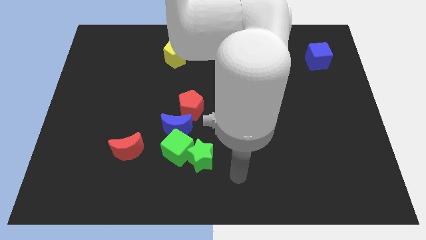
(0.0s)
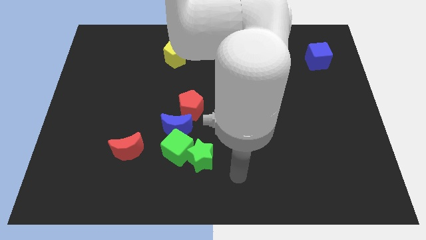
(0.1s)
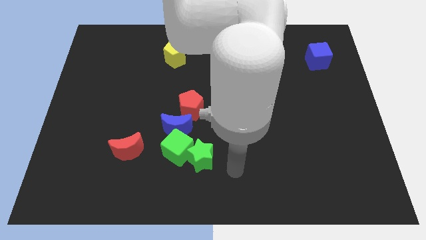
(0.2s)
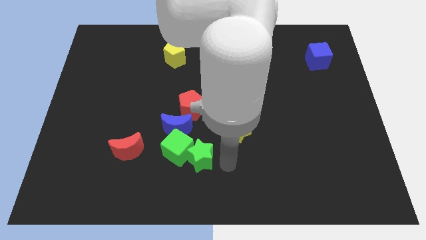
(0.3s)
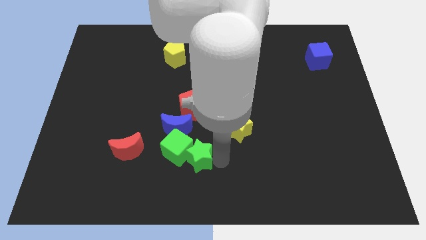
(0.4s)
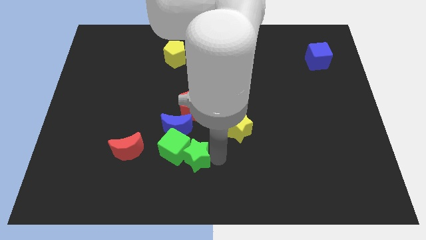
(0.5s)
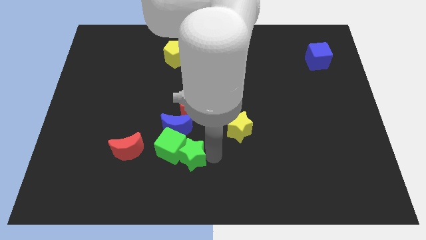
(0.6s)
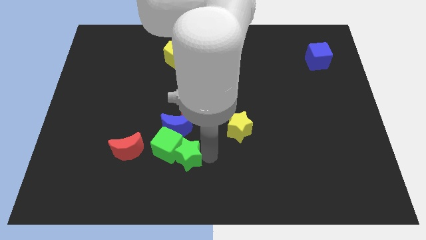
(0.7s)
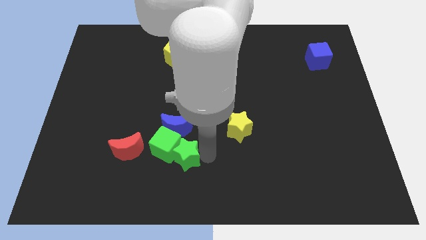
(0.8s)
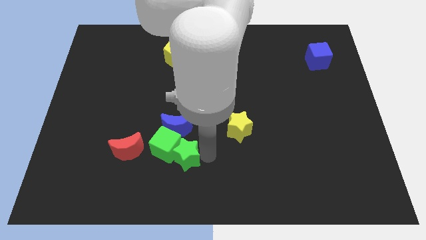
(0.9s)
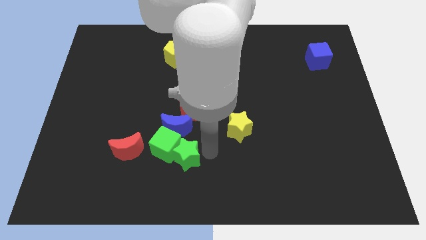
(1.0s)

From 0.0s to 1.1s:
push the green blocks slightly to the left

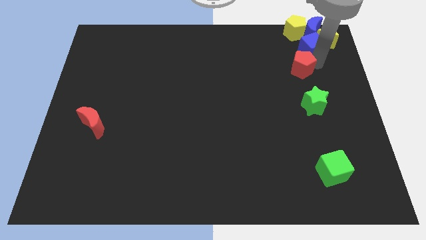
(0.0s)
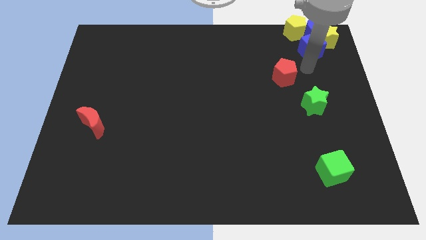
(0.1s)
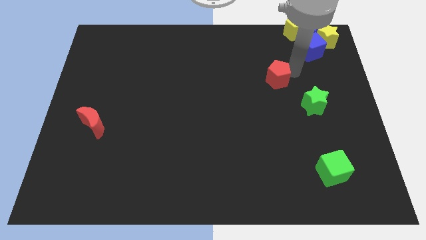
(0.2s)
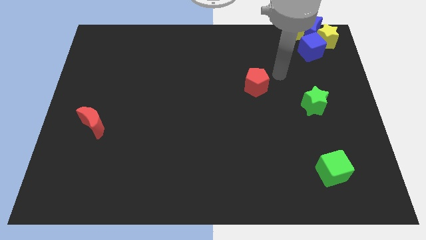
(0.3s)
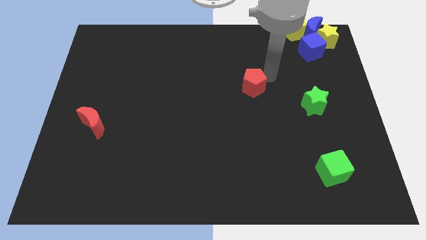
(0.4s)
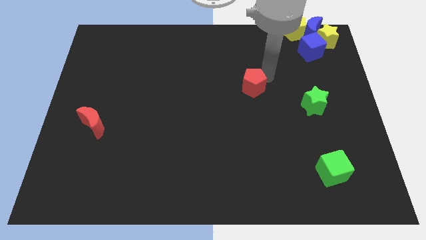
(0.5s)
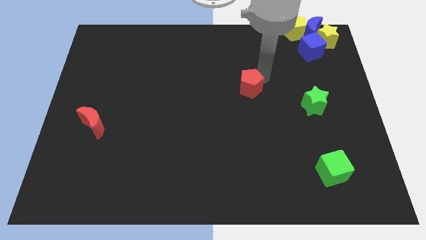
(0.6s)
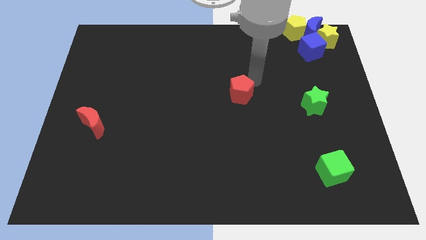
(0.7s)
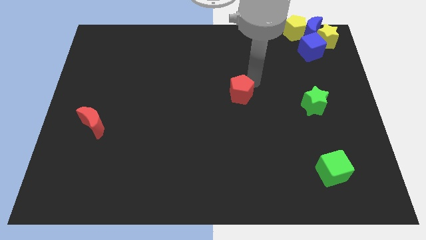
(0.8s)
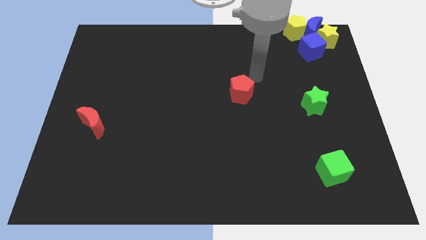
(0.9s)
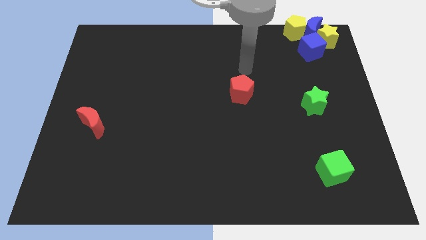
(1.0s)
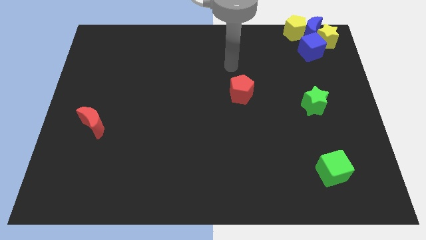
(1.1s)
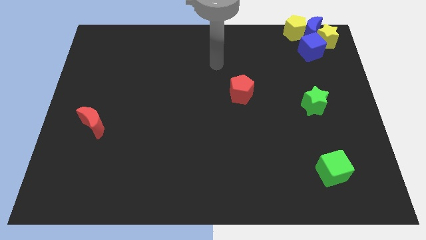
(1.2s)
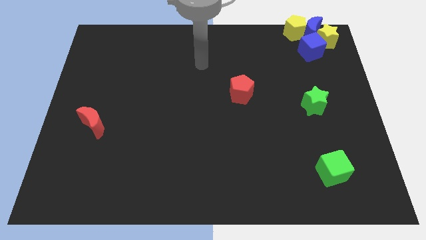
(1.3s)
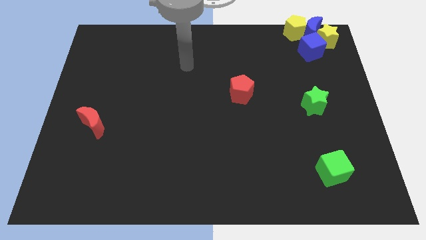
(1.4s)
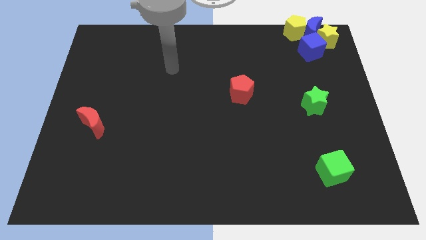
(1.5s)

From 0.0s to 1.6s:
move the red pentagon to the left of the green star

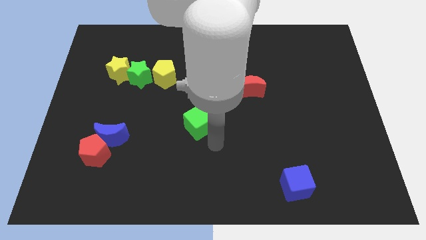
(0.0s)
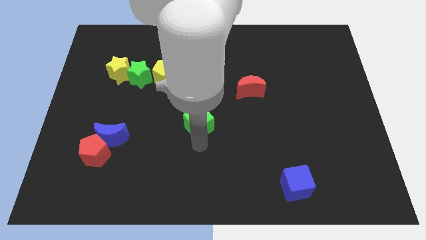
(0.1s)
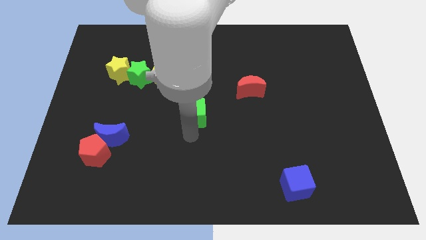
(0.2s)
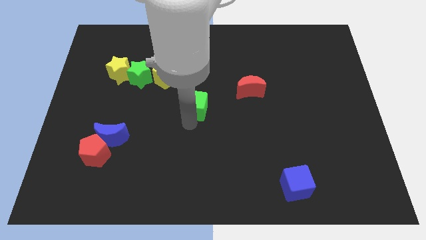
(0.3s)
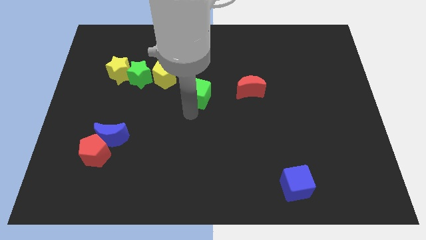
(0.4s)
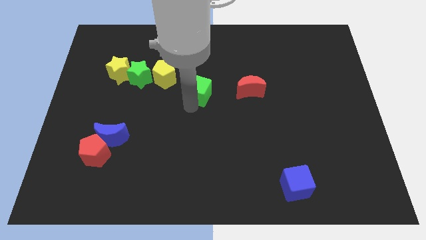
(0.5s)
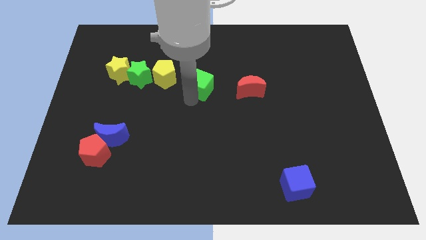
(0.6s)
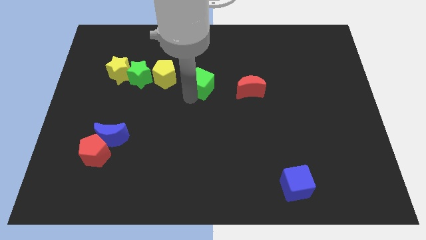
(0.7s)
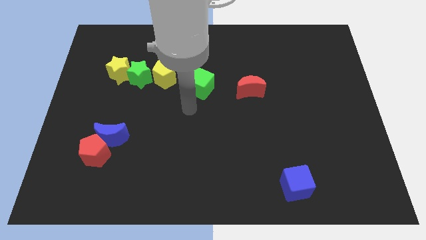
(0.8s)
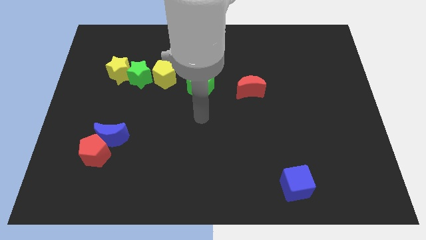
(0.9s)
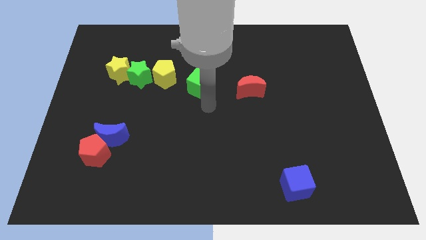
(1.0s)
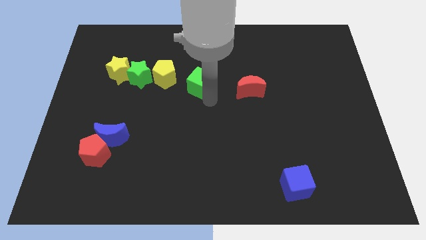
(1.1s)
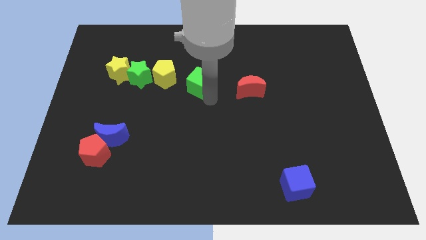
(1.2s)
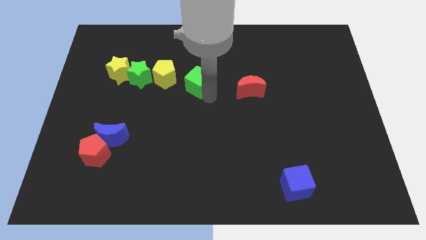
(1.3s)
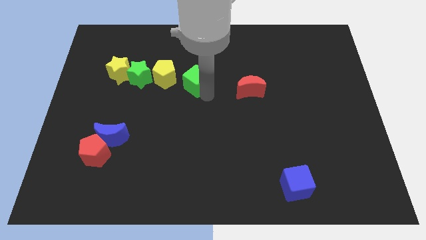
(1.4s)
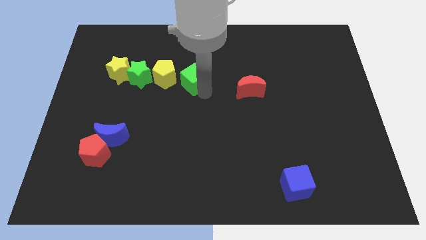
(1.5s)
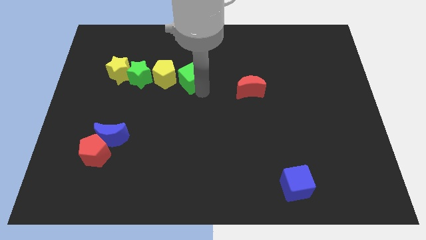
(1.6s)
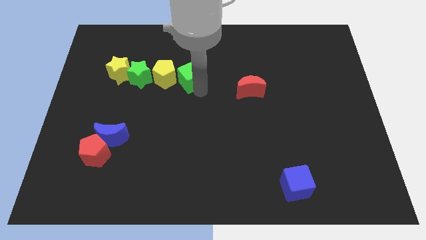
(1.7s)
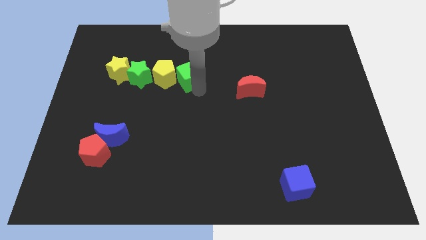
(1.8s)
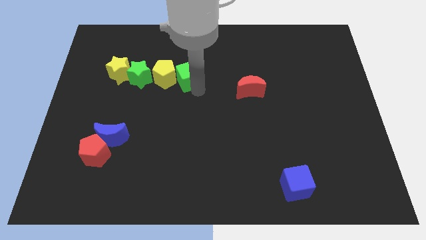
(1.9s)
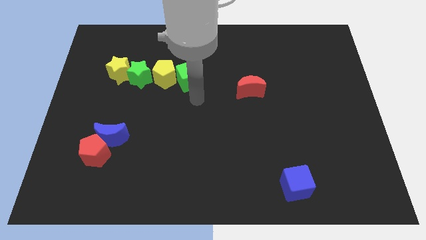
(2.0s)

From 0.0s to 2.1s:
move green cube right to the yellow pentagon

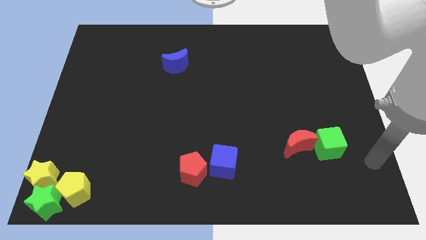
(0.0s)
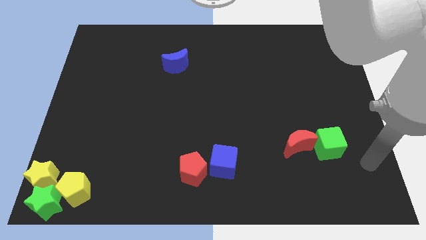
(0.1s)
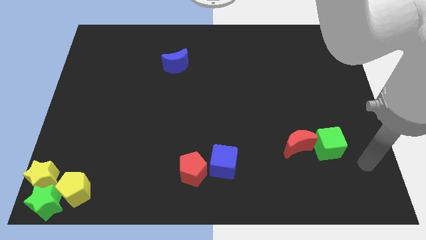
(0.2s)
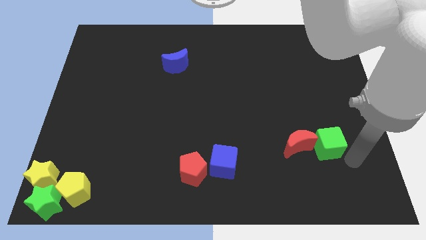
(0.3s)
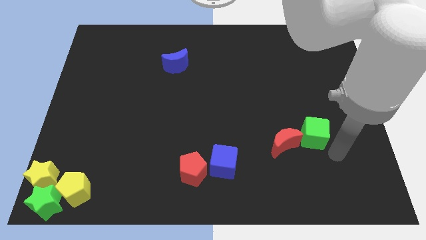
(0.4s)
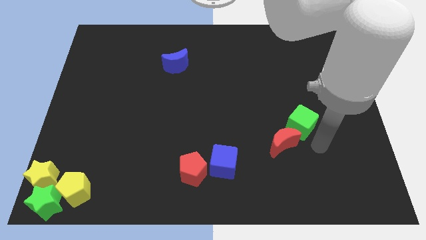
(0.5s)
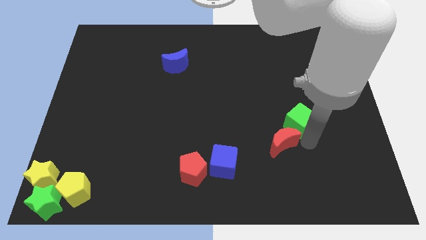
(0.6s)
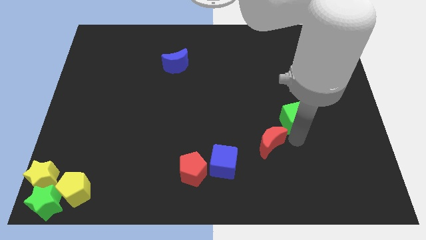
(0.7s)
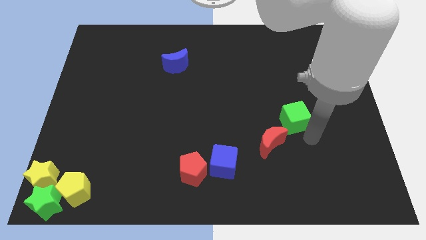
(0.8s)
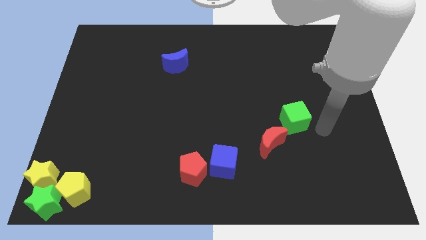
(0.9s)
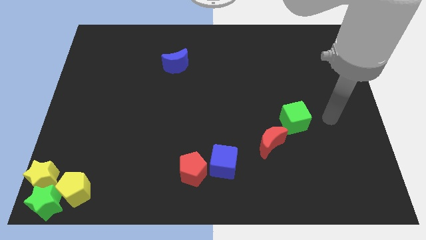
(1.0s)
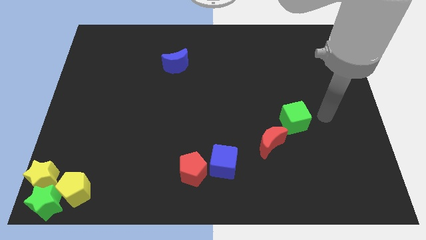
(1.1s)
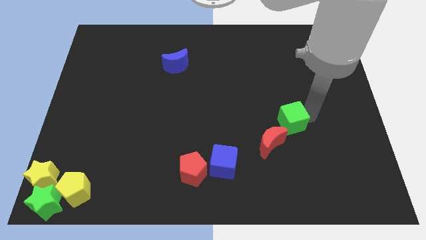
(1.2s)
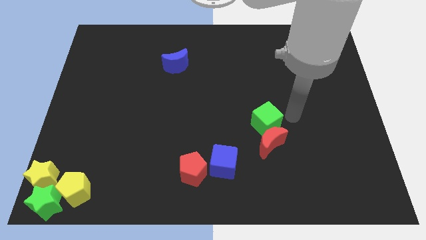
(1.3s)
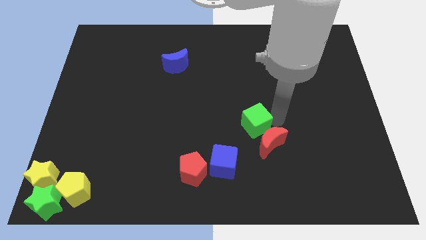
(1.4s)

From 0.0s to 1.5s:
place a green cube to the left of the red moon

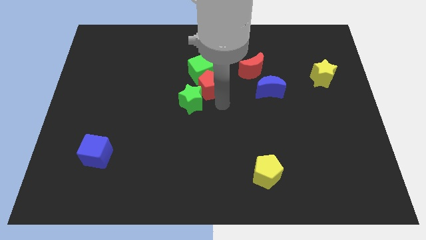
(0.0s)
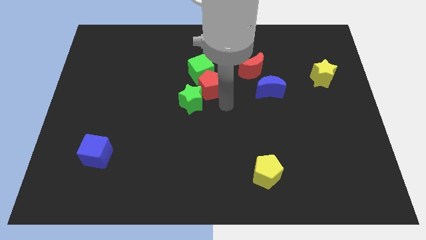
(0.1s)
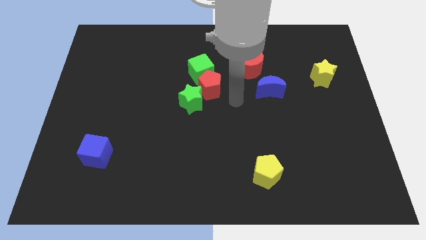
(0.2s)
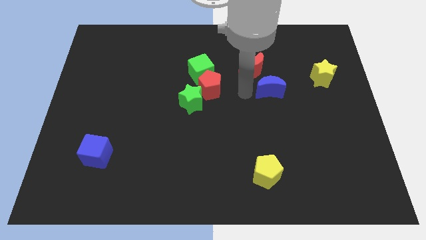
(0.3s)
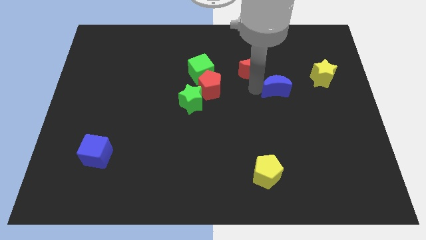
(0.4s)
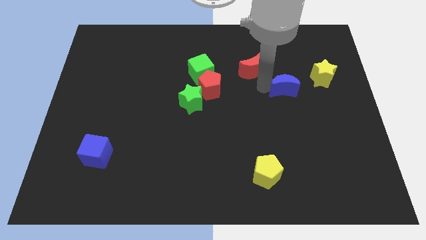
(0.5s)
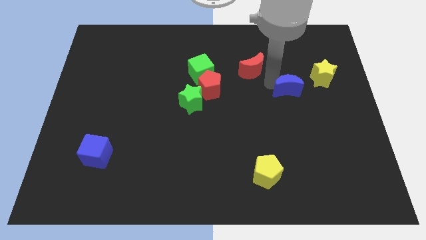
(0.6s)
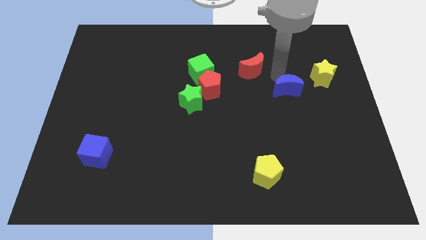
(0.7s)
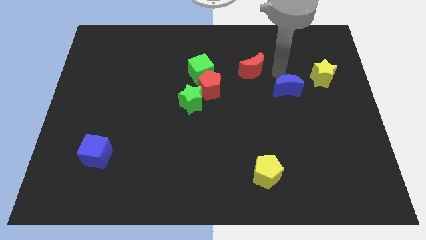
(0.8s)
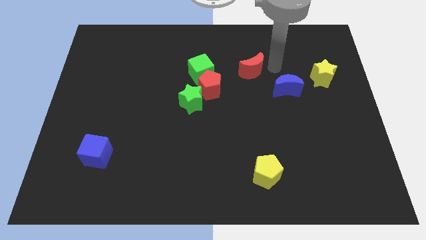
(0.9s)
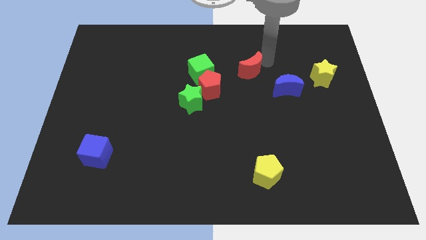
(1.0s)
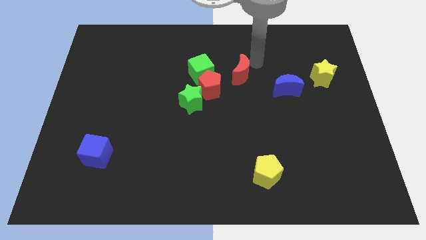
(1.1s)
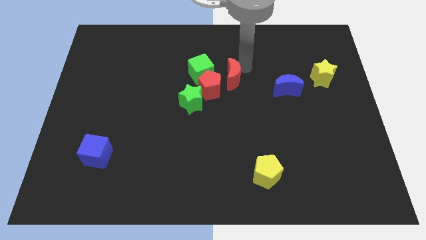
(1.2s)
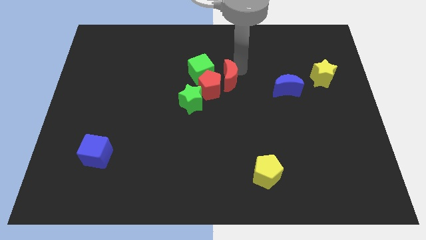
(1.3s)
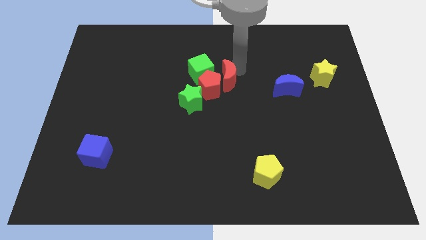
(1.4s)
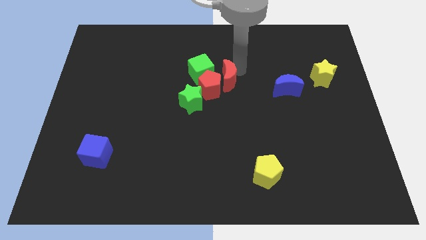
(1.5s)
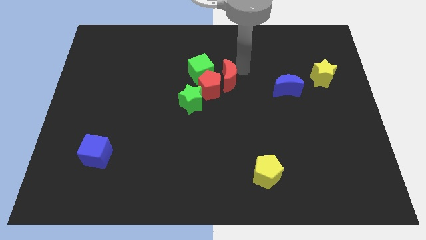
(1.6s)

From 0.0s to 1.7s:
move the red moon towrads the red pentagon

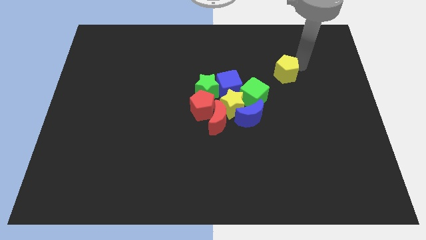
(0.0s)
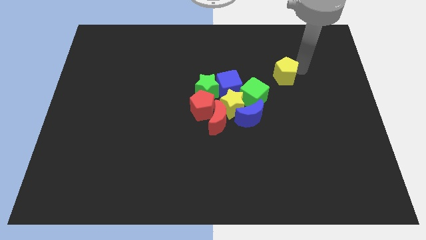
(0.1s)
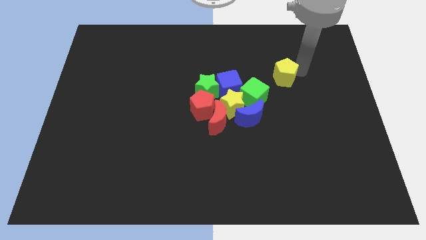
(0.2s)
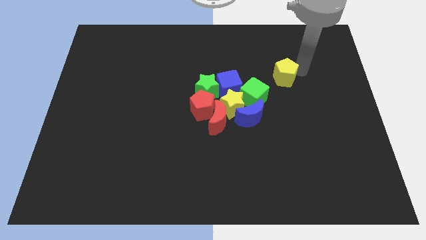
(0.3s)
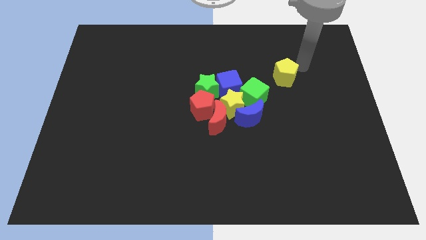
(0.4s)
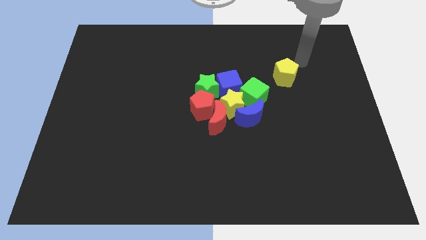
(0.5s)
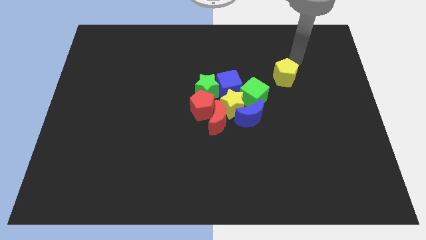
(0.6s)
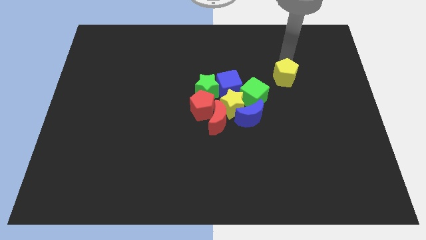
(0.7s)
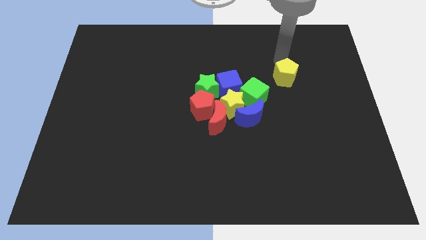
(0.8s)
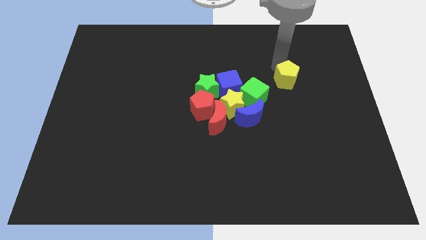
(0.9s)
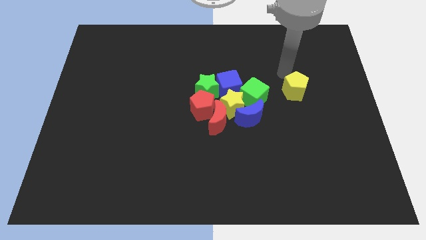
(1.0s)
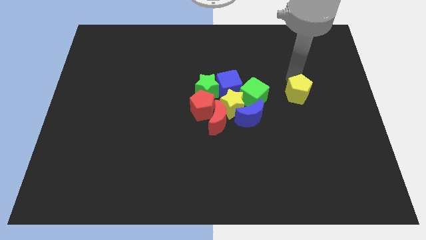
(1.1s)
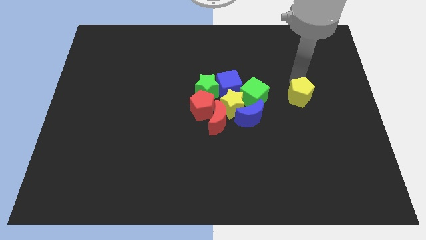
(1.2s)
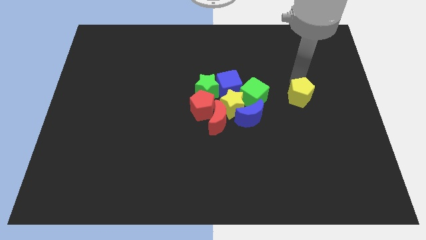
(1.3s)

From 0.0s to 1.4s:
place yellow pentagon to the center
